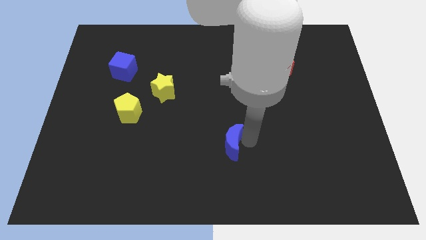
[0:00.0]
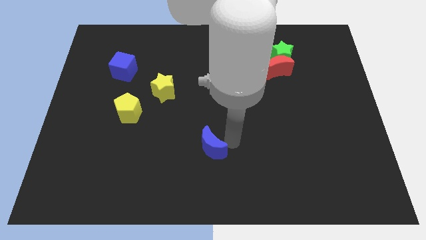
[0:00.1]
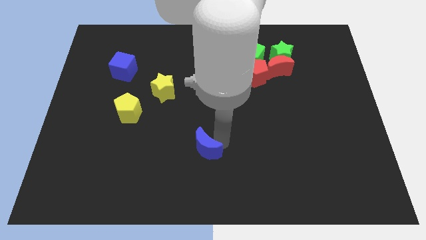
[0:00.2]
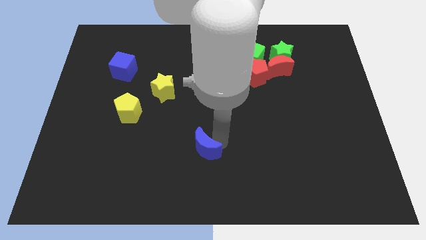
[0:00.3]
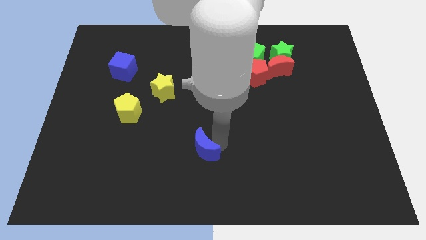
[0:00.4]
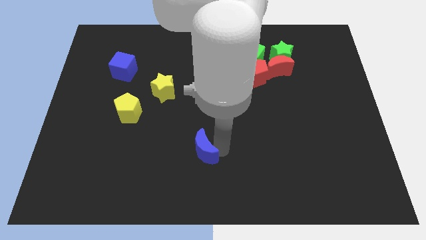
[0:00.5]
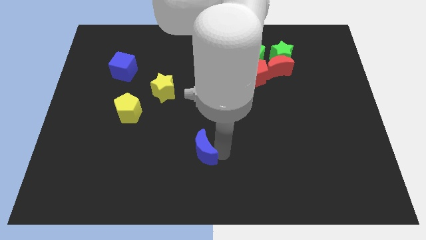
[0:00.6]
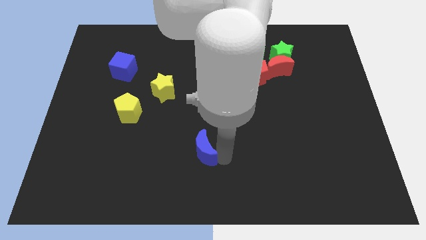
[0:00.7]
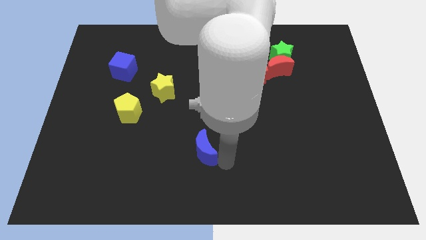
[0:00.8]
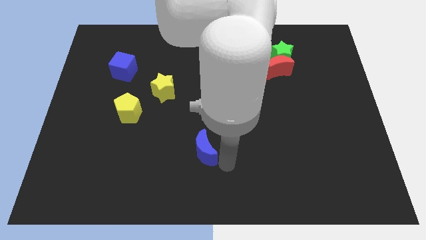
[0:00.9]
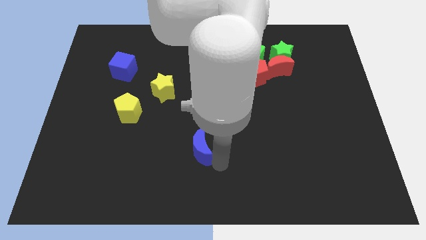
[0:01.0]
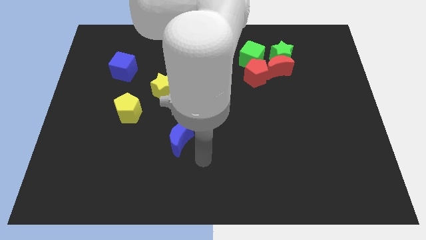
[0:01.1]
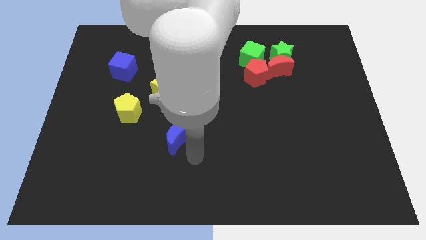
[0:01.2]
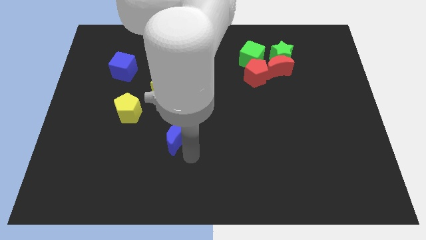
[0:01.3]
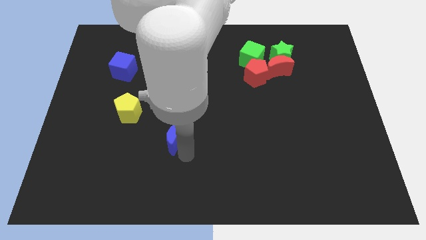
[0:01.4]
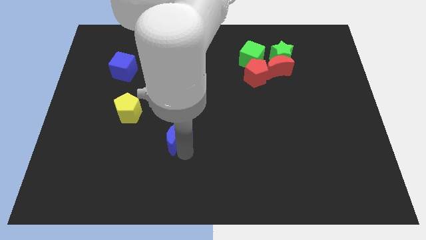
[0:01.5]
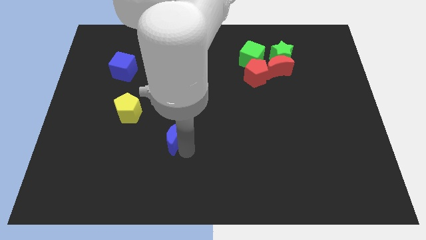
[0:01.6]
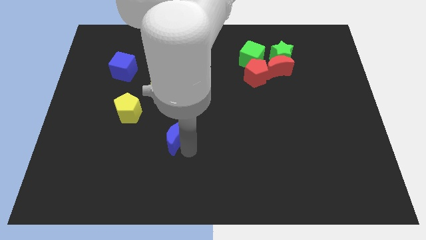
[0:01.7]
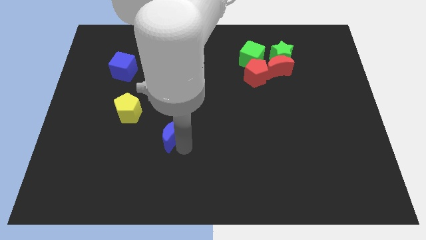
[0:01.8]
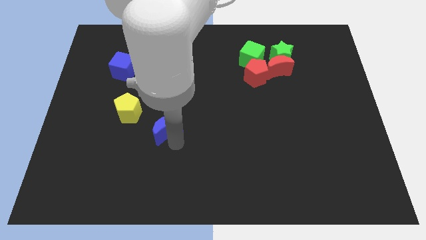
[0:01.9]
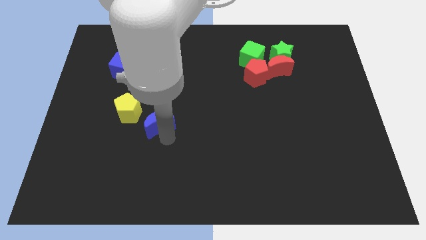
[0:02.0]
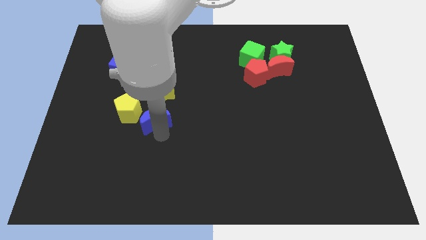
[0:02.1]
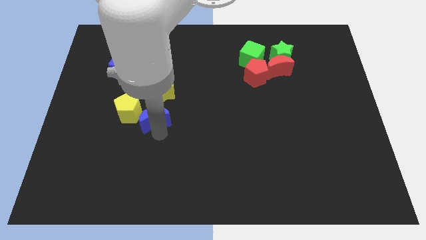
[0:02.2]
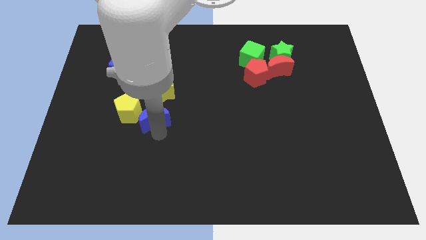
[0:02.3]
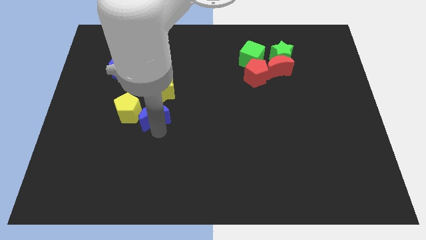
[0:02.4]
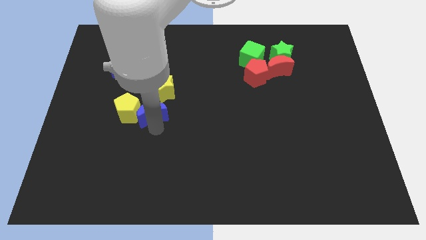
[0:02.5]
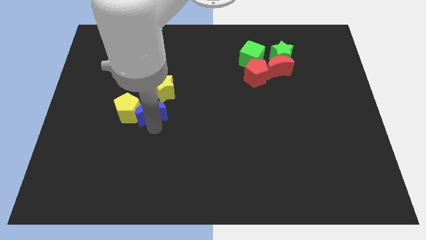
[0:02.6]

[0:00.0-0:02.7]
move the blue moon into the yellow pentagon

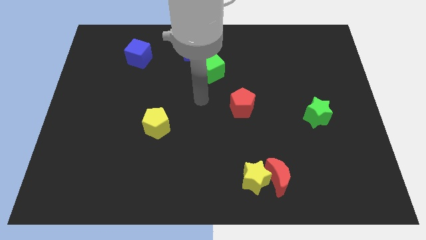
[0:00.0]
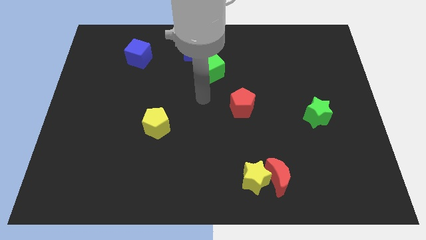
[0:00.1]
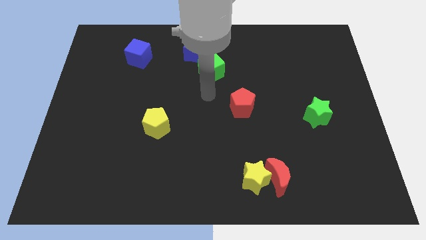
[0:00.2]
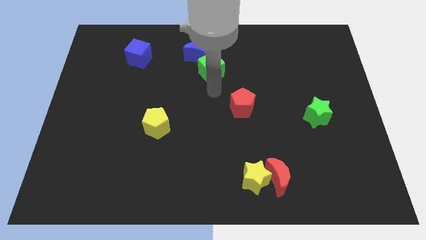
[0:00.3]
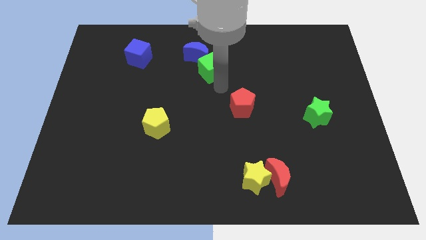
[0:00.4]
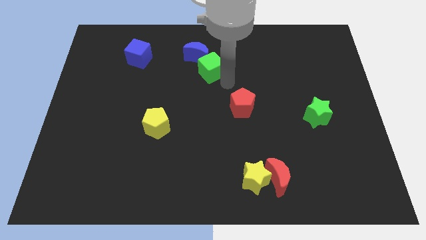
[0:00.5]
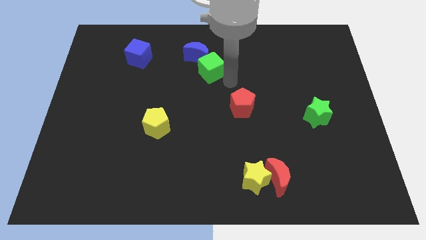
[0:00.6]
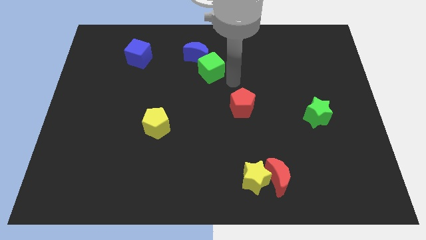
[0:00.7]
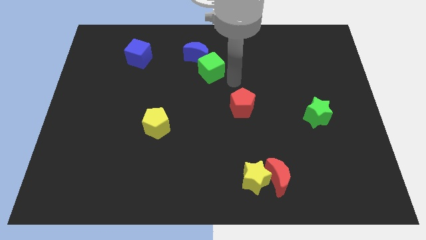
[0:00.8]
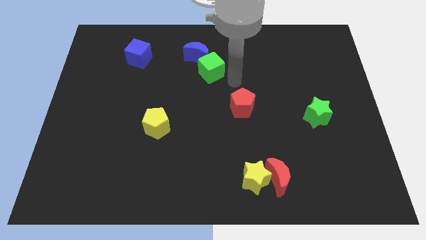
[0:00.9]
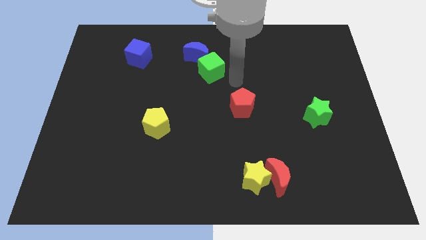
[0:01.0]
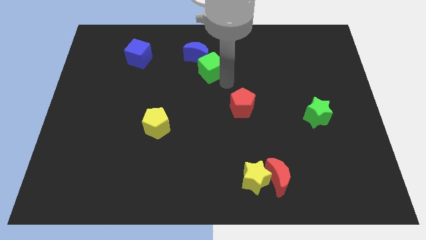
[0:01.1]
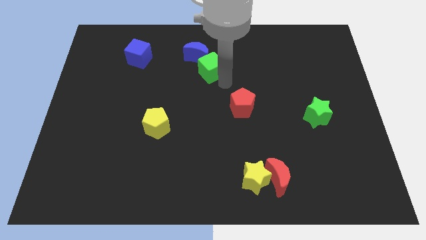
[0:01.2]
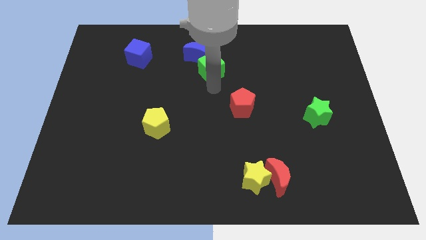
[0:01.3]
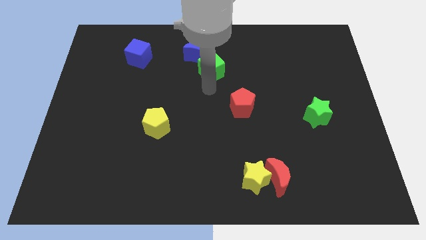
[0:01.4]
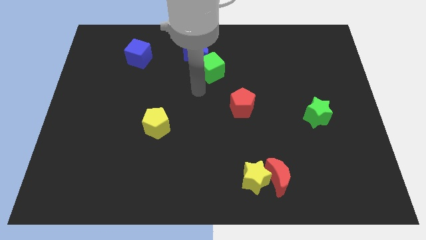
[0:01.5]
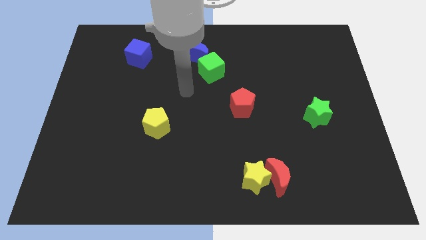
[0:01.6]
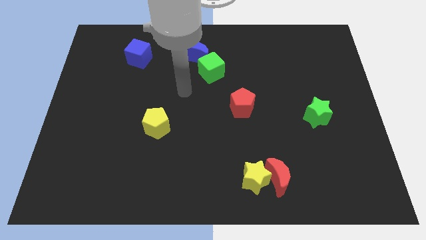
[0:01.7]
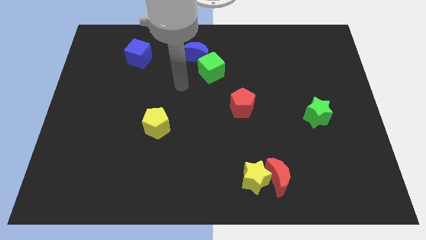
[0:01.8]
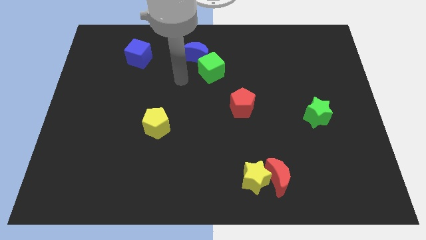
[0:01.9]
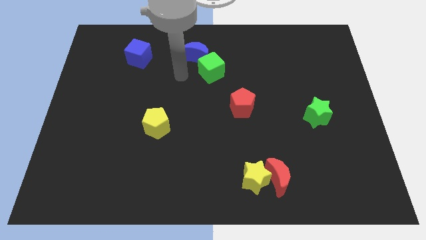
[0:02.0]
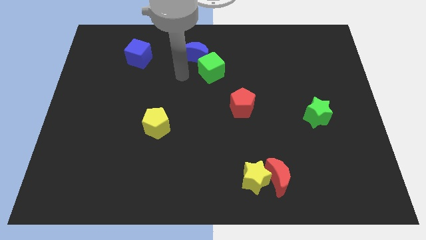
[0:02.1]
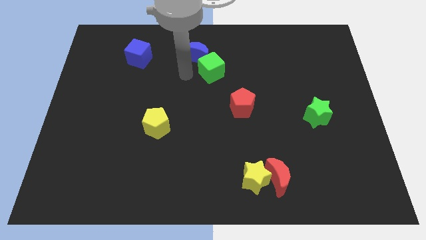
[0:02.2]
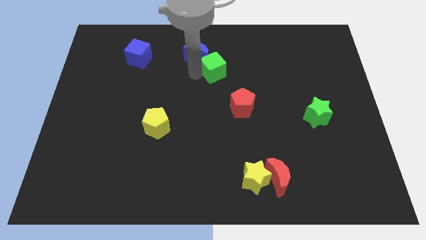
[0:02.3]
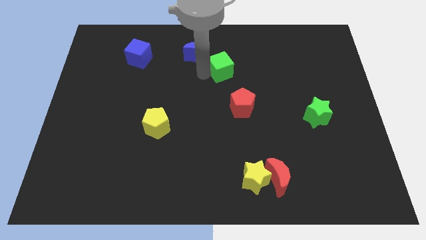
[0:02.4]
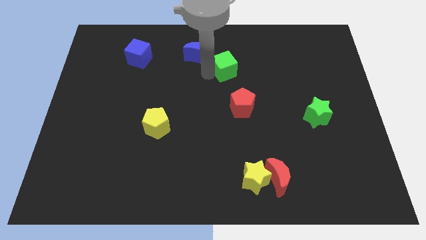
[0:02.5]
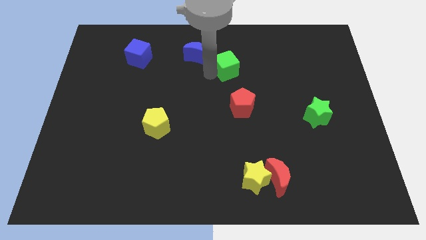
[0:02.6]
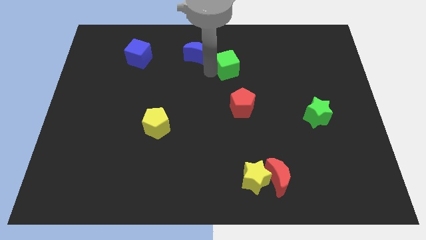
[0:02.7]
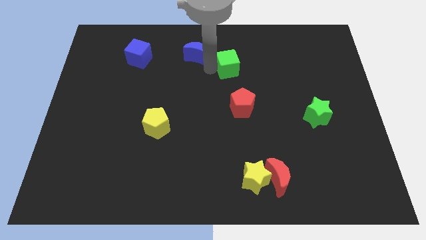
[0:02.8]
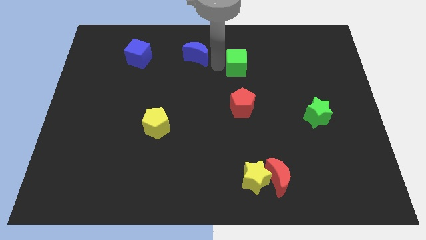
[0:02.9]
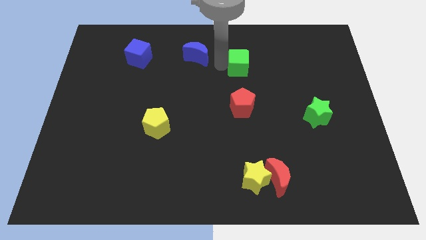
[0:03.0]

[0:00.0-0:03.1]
move the green cube slightly to the right side of the table

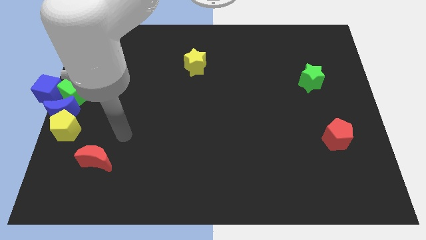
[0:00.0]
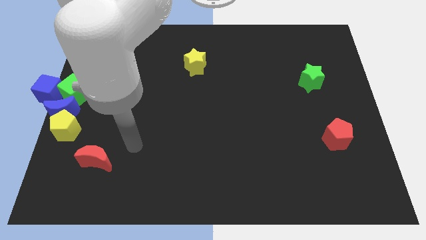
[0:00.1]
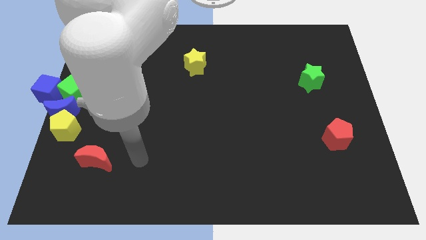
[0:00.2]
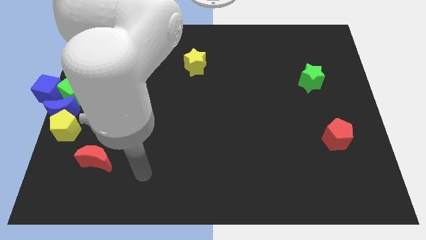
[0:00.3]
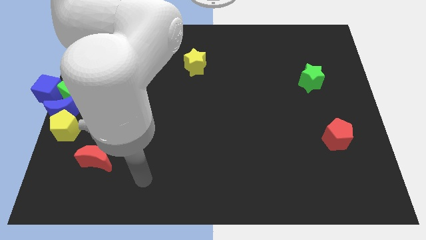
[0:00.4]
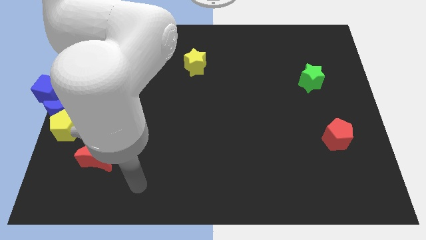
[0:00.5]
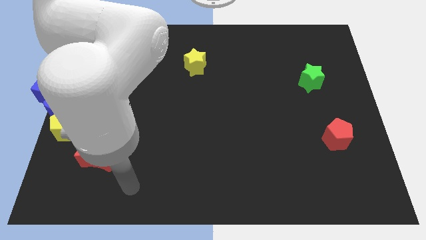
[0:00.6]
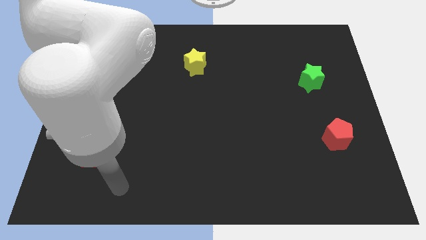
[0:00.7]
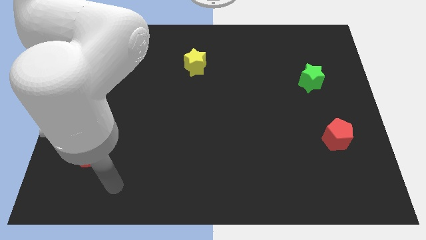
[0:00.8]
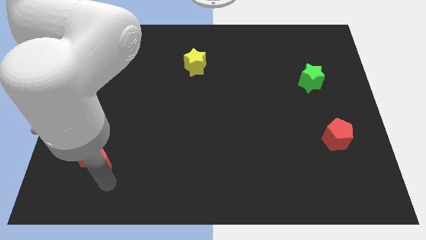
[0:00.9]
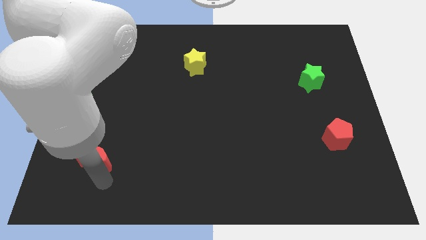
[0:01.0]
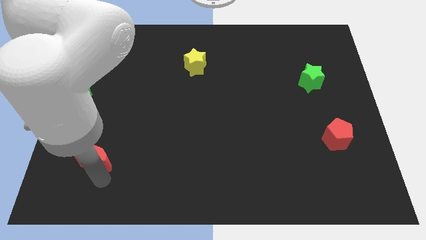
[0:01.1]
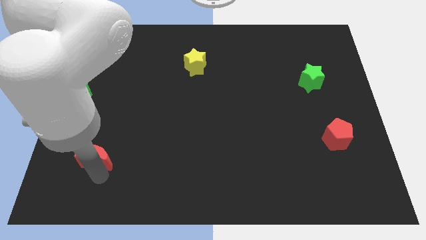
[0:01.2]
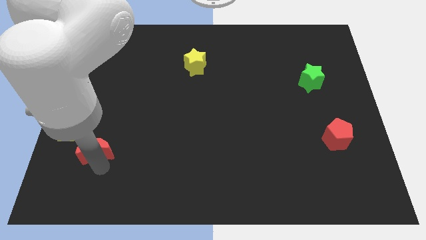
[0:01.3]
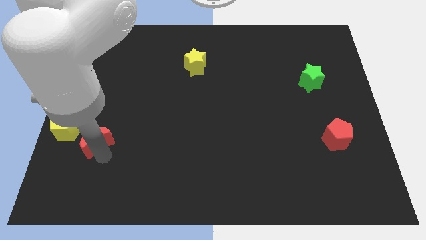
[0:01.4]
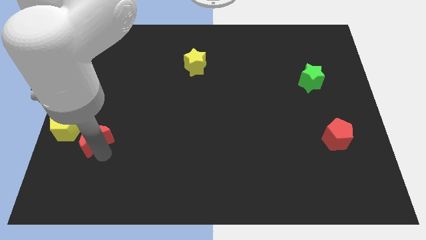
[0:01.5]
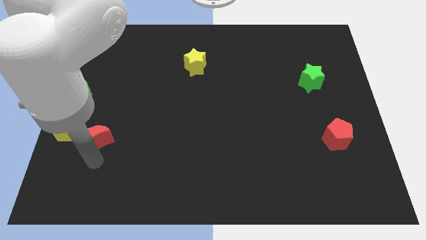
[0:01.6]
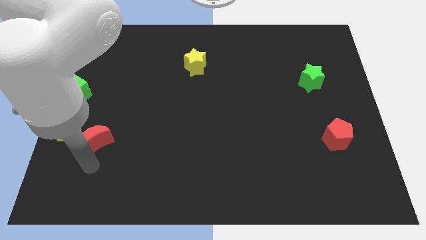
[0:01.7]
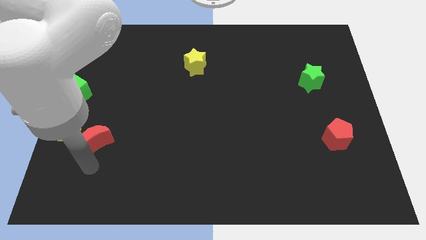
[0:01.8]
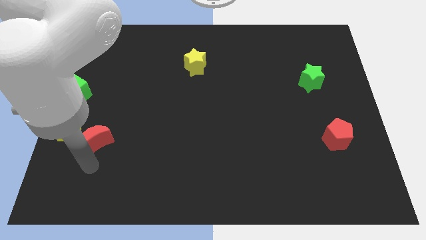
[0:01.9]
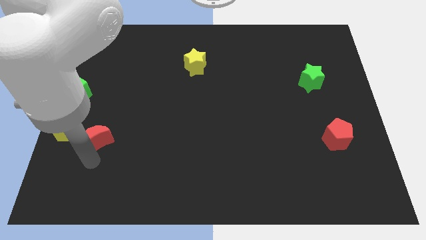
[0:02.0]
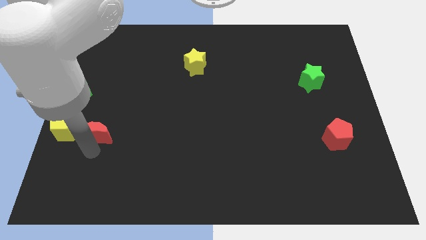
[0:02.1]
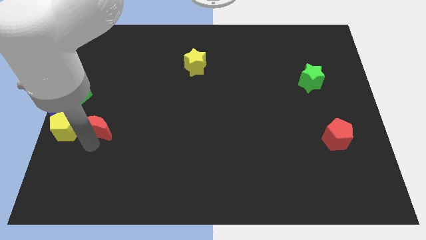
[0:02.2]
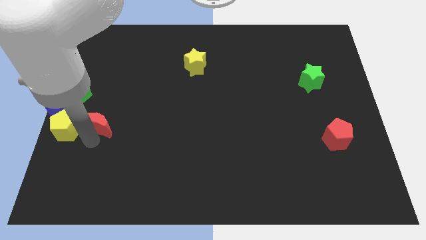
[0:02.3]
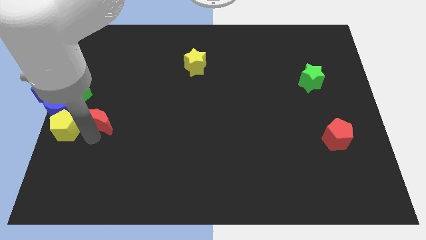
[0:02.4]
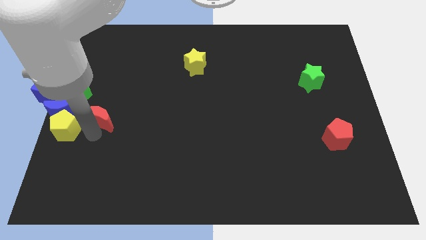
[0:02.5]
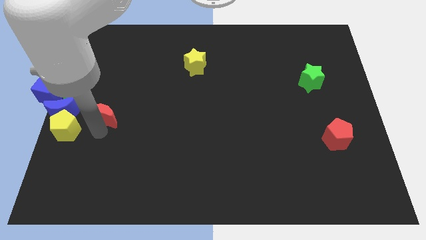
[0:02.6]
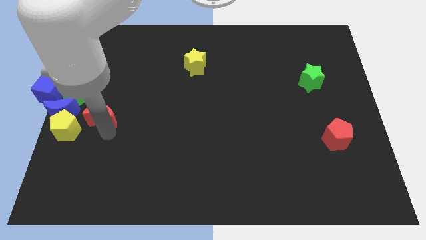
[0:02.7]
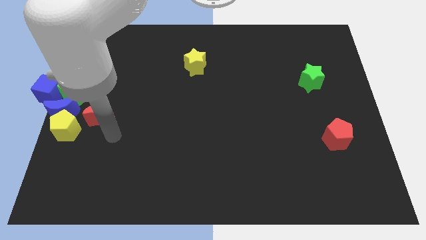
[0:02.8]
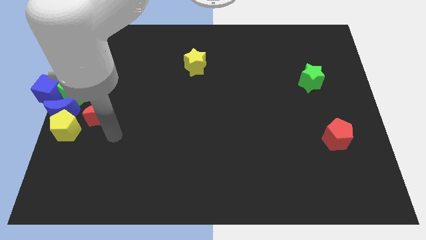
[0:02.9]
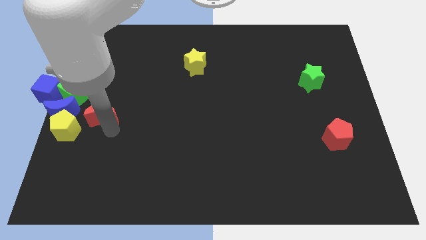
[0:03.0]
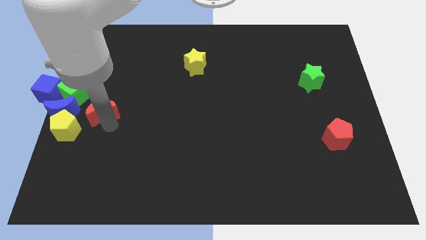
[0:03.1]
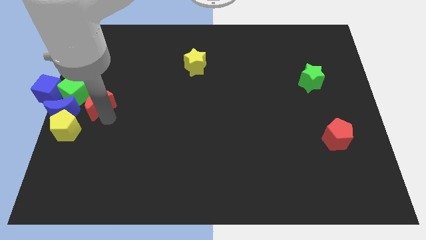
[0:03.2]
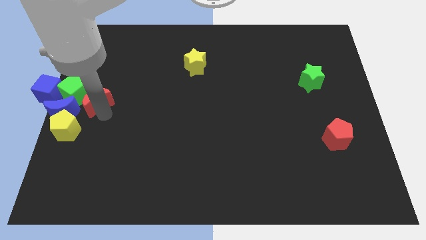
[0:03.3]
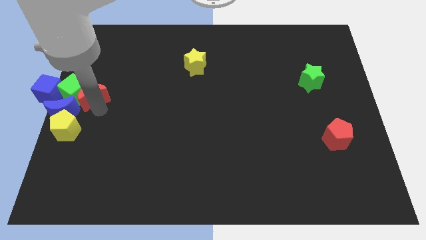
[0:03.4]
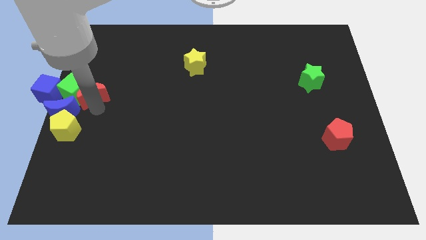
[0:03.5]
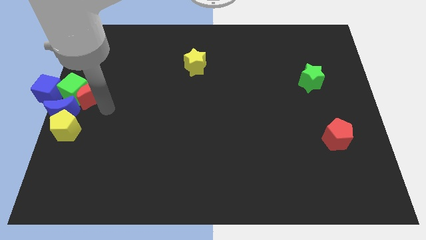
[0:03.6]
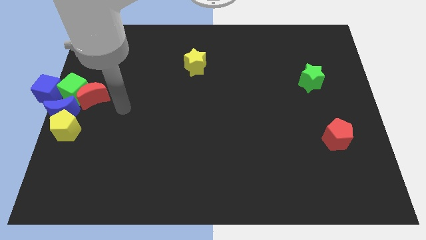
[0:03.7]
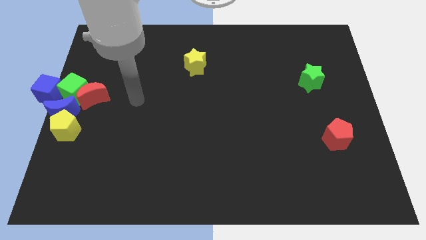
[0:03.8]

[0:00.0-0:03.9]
place the red crescent below the green cube
